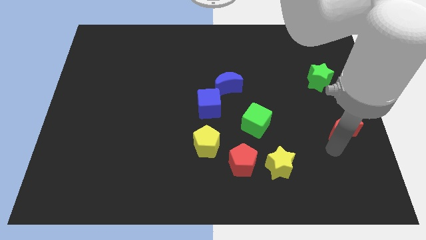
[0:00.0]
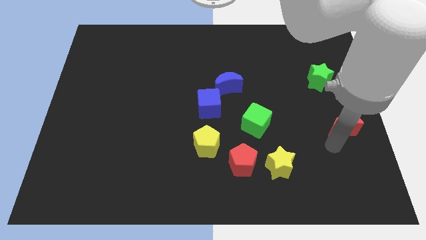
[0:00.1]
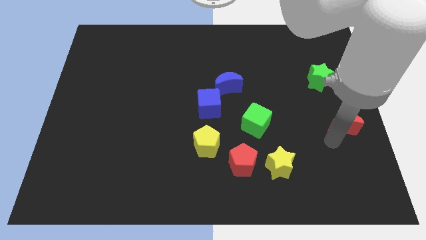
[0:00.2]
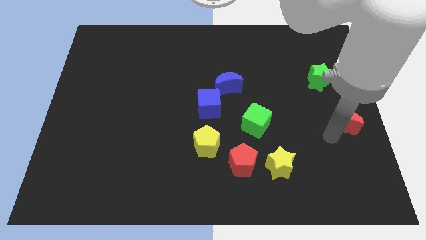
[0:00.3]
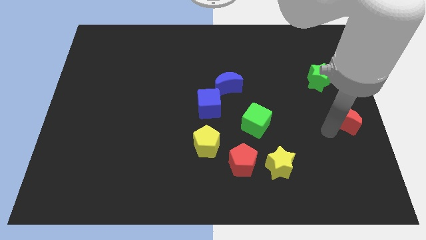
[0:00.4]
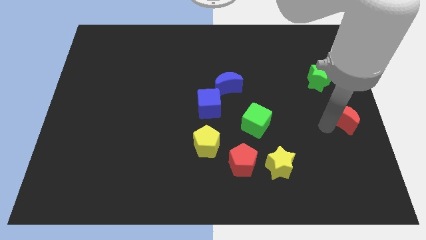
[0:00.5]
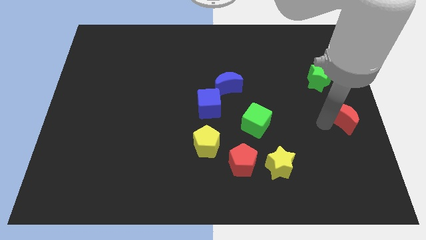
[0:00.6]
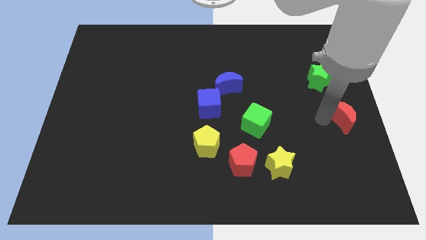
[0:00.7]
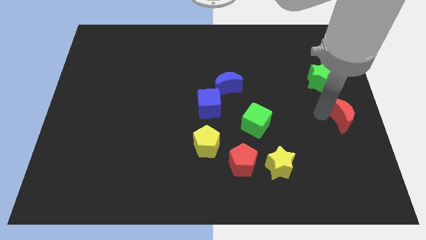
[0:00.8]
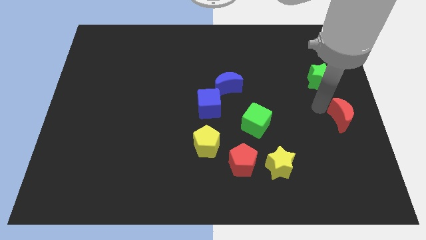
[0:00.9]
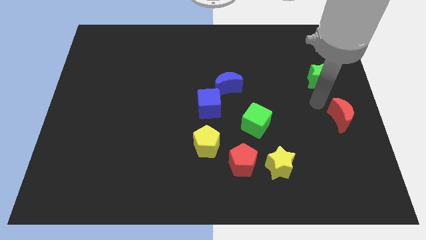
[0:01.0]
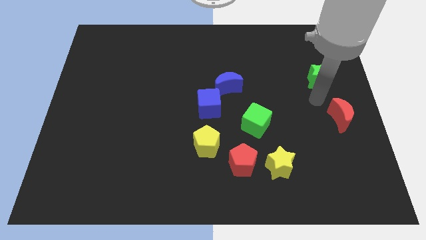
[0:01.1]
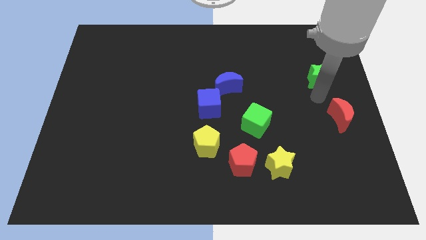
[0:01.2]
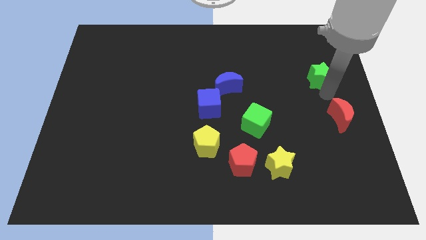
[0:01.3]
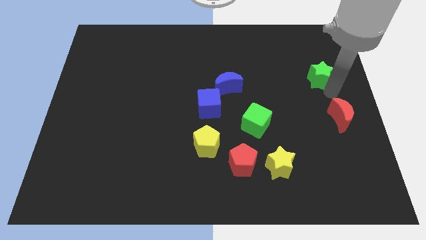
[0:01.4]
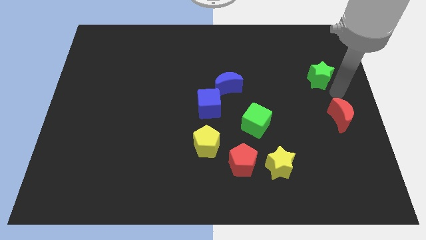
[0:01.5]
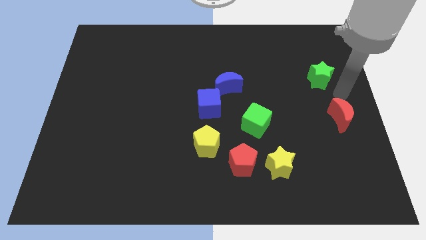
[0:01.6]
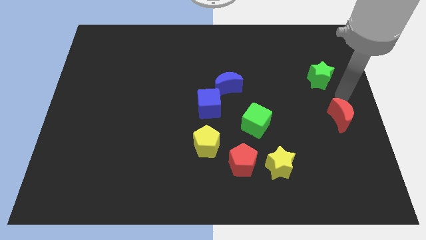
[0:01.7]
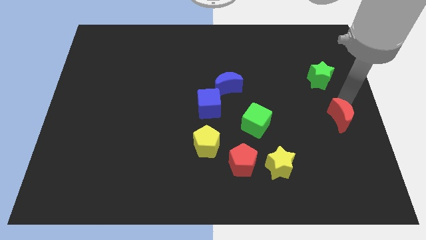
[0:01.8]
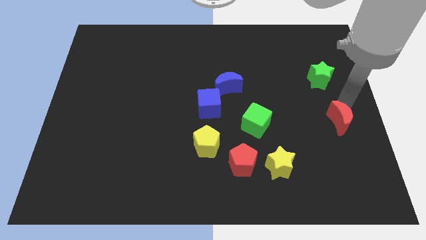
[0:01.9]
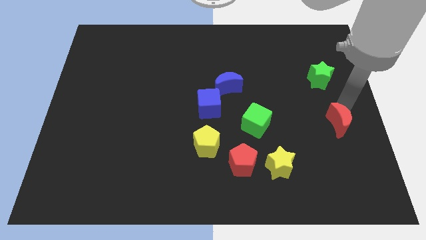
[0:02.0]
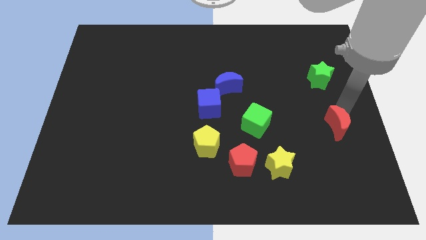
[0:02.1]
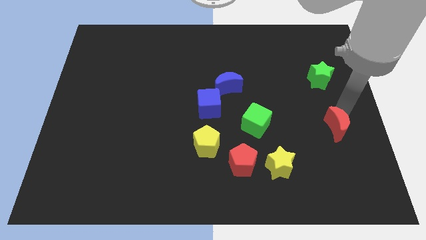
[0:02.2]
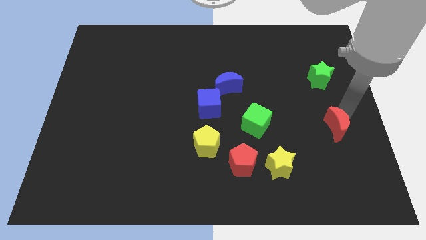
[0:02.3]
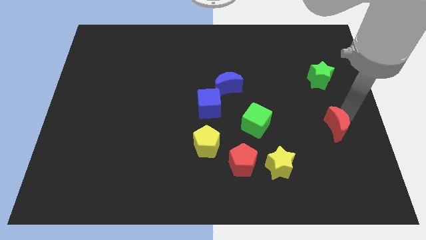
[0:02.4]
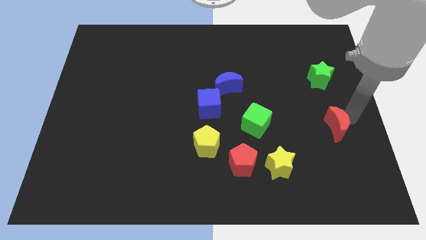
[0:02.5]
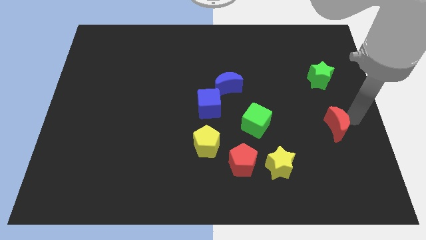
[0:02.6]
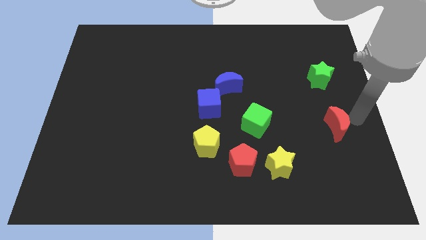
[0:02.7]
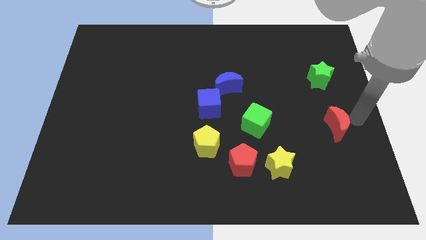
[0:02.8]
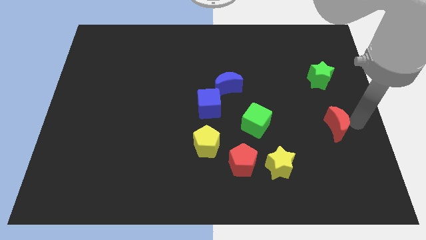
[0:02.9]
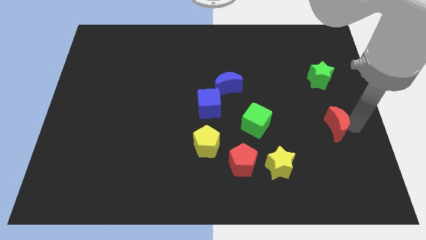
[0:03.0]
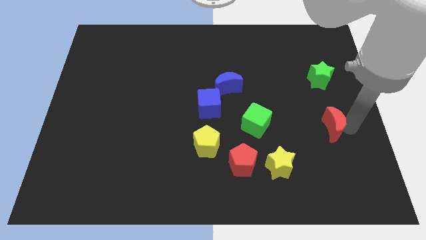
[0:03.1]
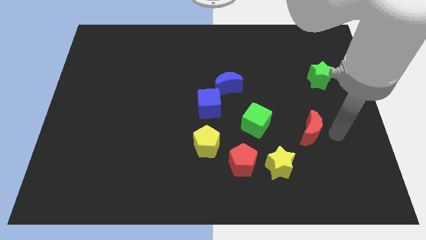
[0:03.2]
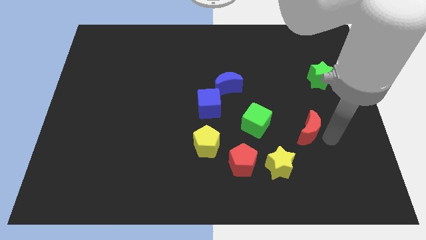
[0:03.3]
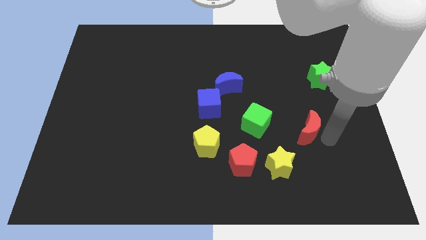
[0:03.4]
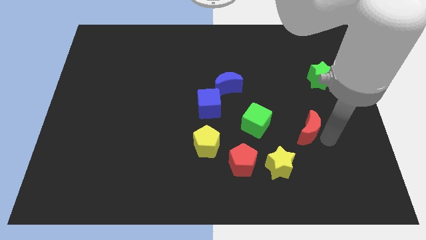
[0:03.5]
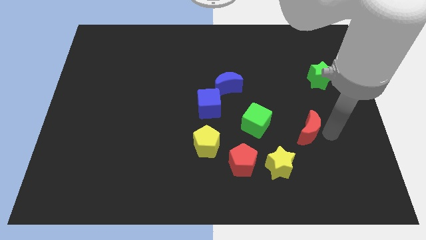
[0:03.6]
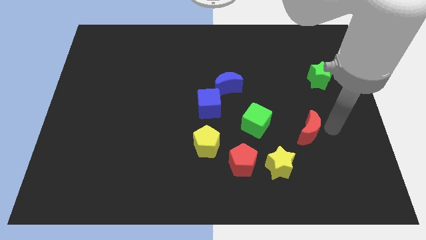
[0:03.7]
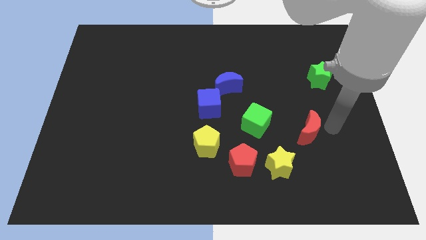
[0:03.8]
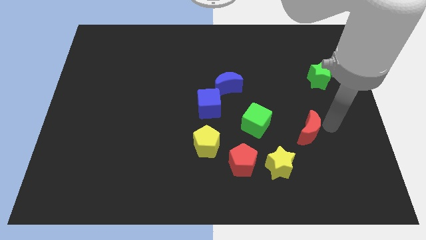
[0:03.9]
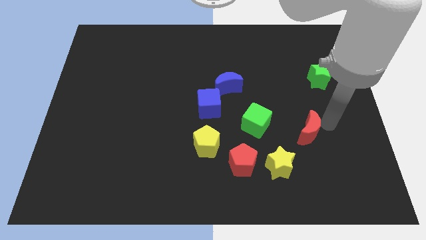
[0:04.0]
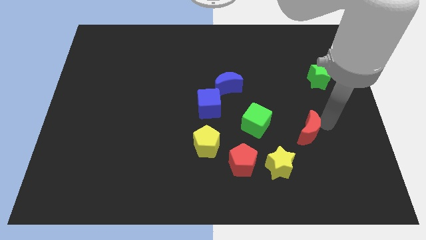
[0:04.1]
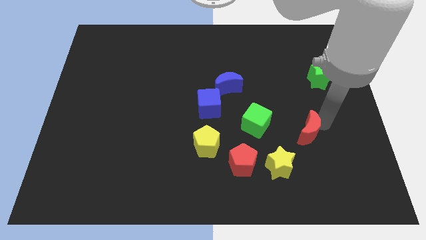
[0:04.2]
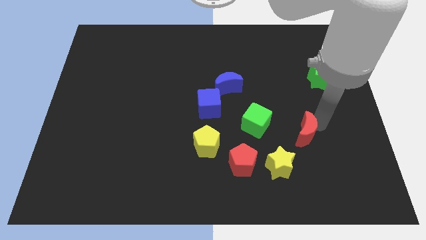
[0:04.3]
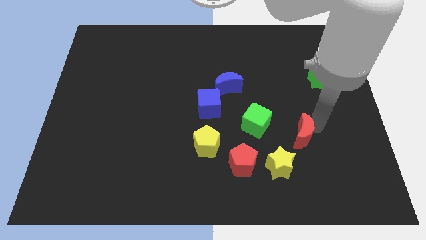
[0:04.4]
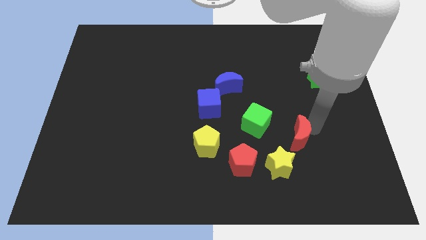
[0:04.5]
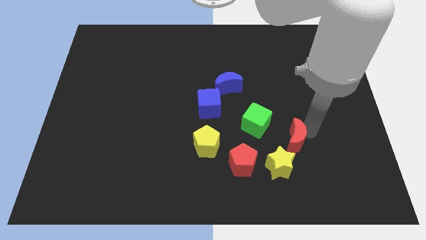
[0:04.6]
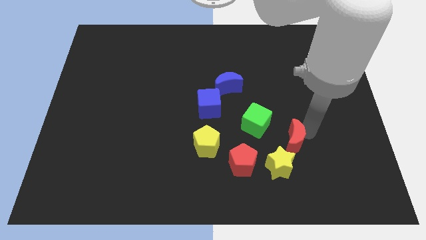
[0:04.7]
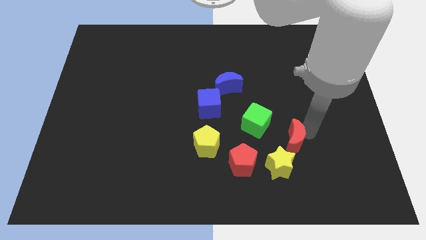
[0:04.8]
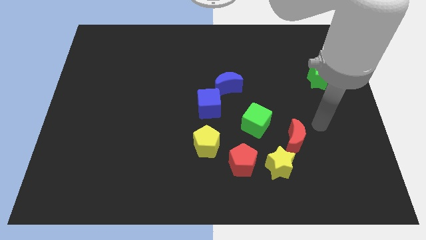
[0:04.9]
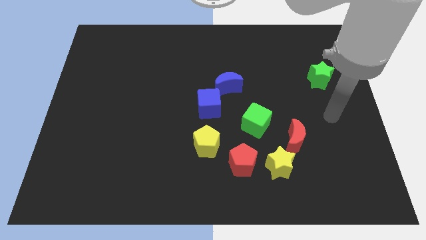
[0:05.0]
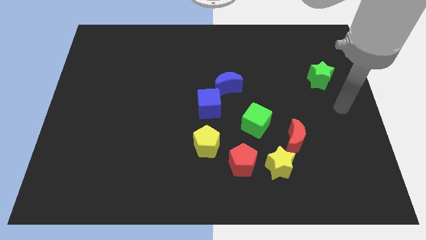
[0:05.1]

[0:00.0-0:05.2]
move the red moon into yellow star

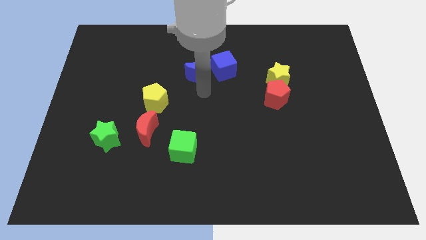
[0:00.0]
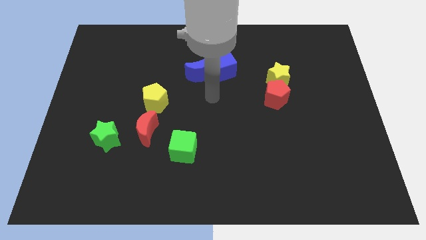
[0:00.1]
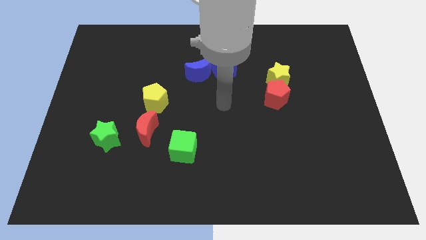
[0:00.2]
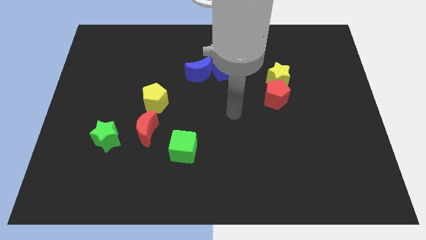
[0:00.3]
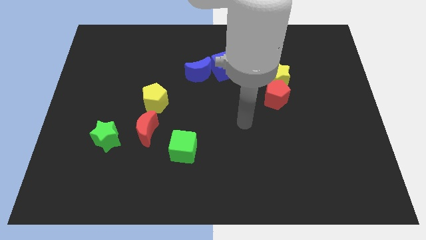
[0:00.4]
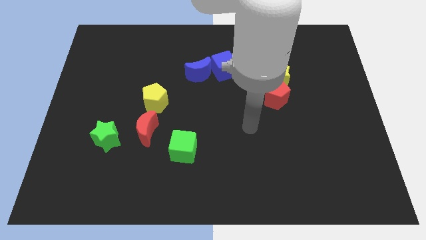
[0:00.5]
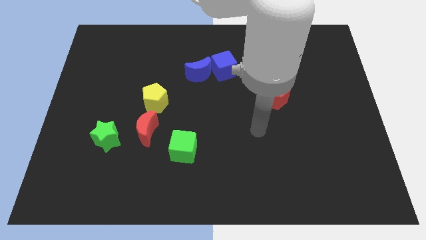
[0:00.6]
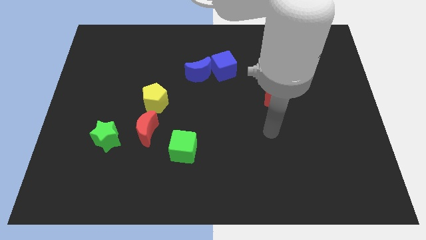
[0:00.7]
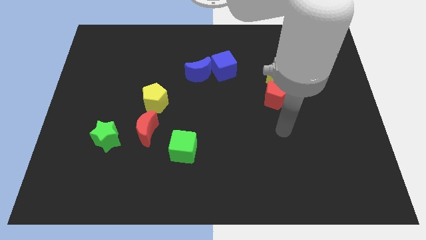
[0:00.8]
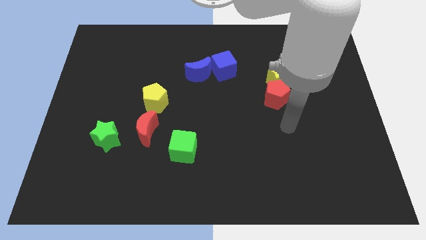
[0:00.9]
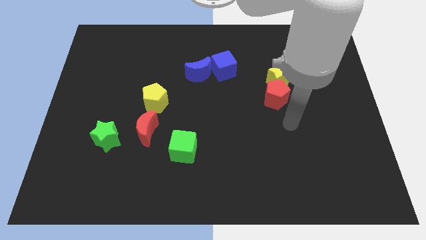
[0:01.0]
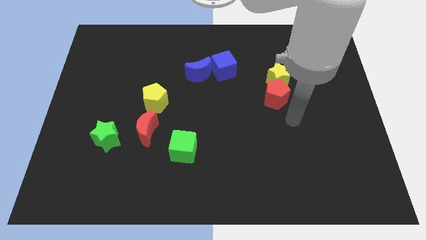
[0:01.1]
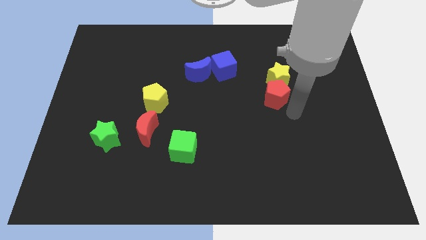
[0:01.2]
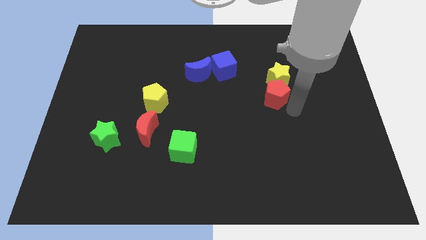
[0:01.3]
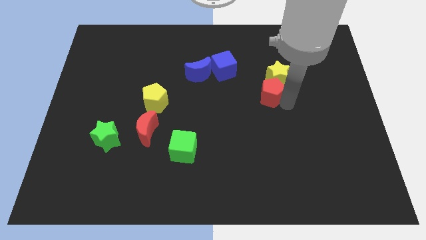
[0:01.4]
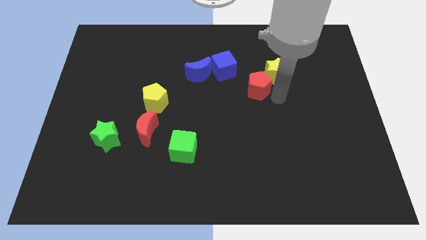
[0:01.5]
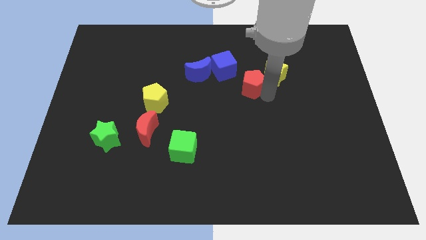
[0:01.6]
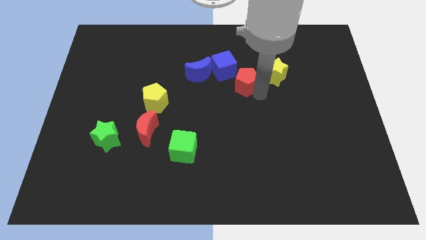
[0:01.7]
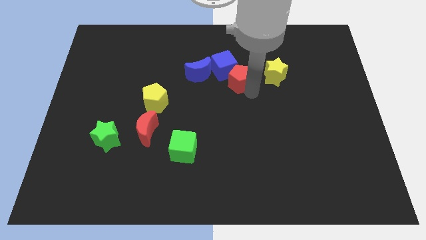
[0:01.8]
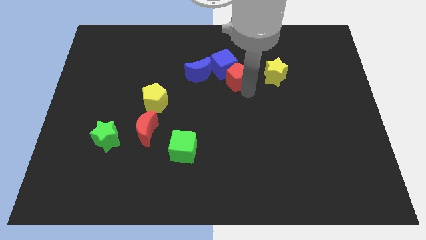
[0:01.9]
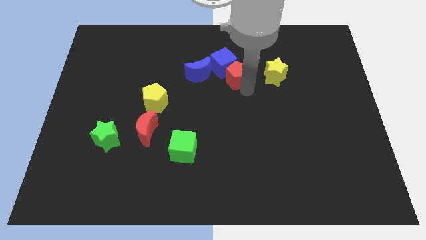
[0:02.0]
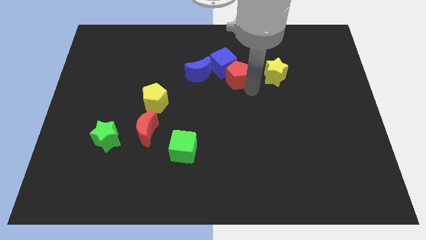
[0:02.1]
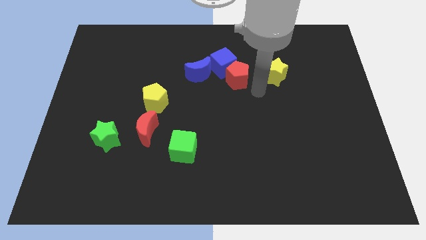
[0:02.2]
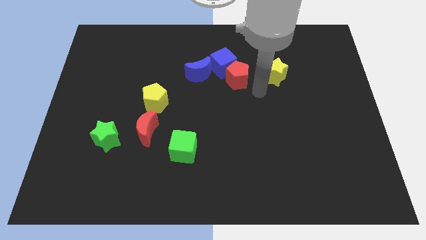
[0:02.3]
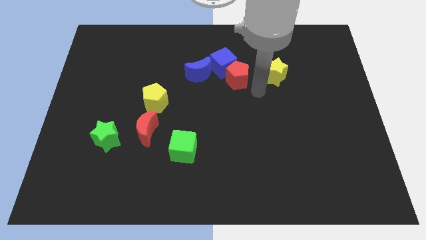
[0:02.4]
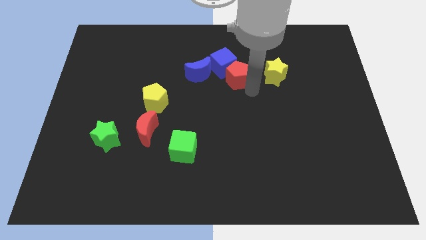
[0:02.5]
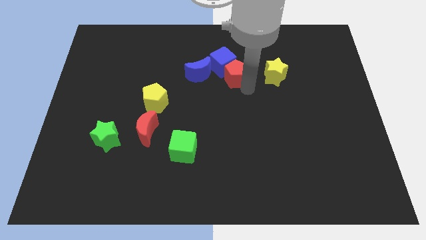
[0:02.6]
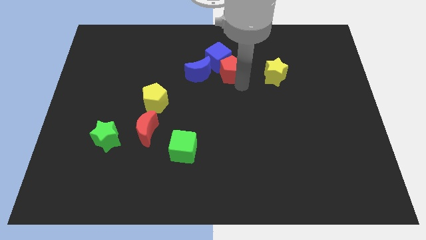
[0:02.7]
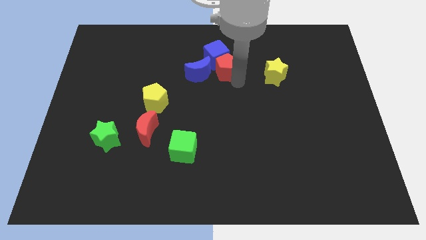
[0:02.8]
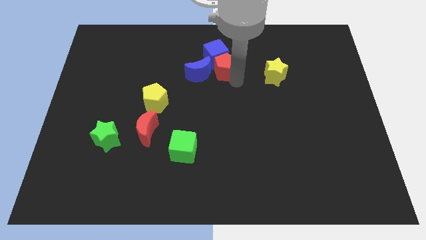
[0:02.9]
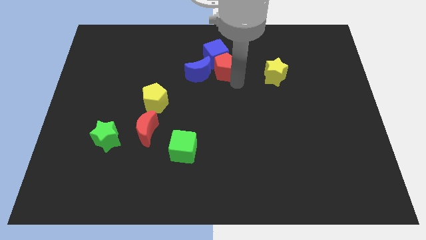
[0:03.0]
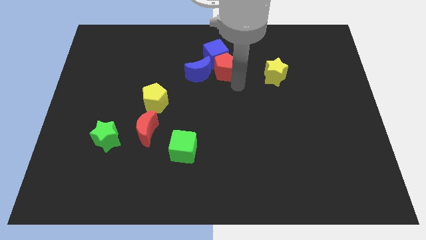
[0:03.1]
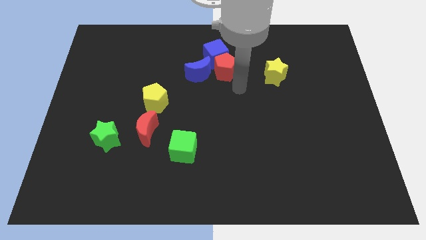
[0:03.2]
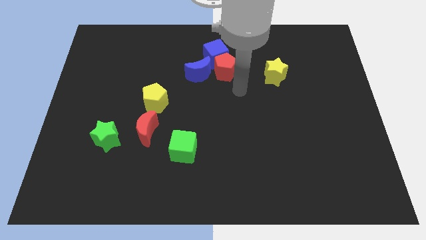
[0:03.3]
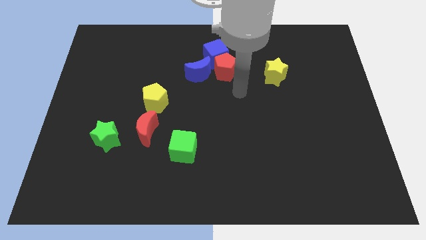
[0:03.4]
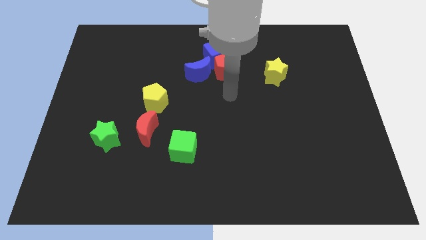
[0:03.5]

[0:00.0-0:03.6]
push the red pentagon into the blue cube

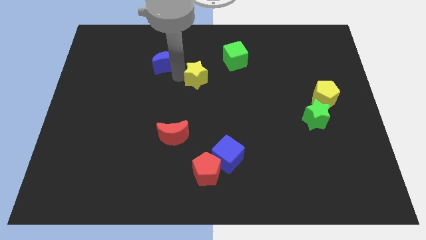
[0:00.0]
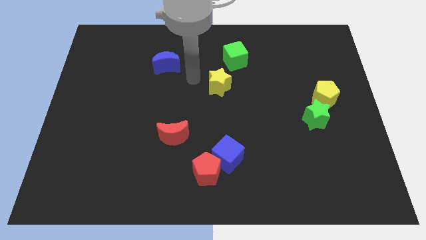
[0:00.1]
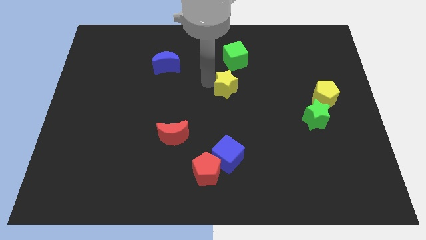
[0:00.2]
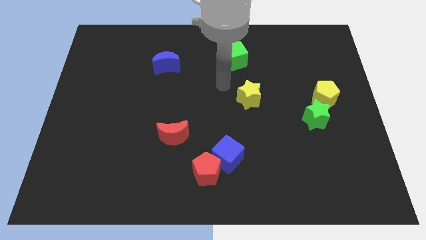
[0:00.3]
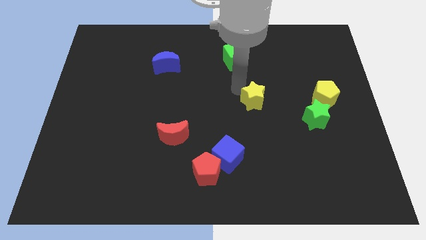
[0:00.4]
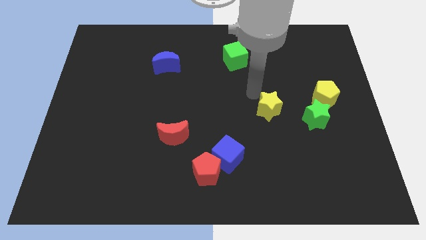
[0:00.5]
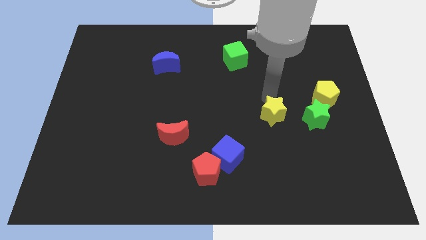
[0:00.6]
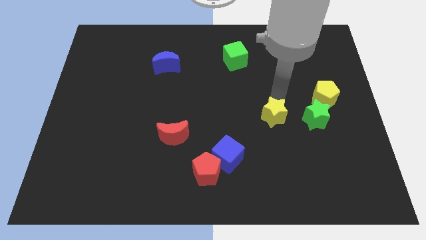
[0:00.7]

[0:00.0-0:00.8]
separate the yellow star from the blue moon
